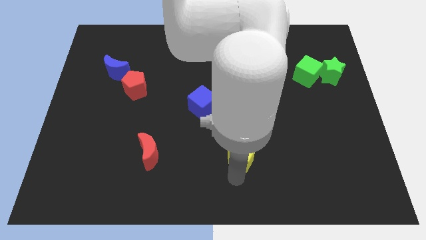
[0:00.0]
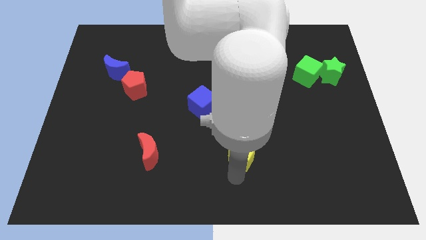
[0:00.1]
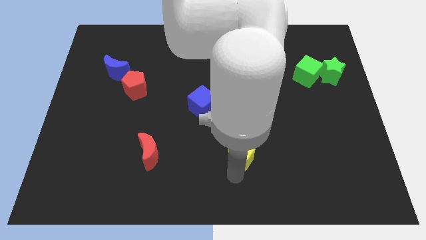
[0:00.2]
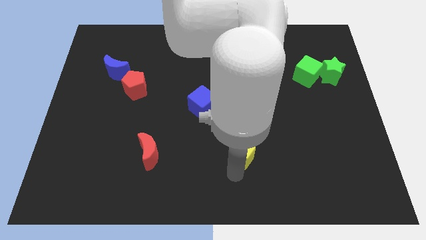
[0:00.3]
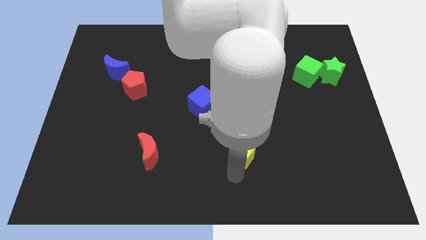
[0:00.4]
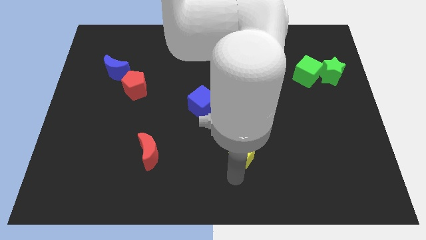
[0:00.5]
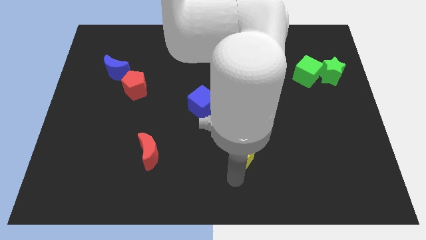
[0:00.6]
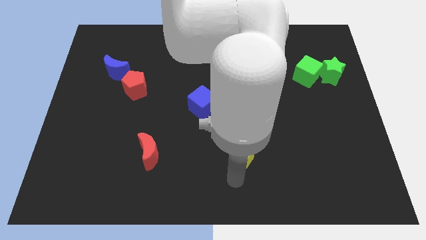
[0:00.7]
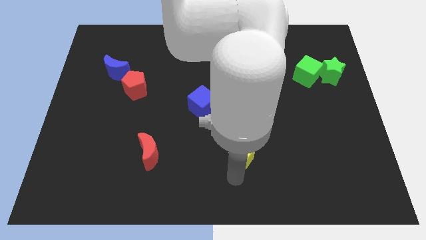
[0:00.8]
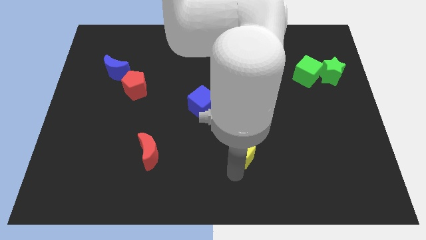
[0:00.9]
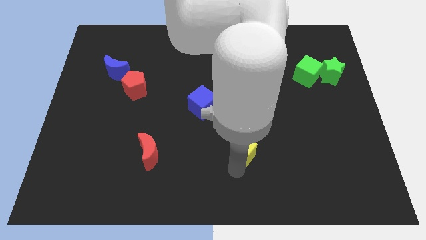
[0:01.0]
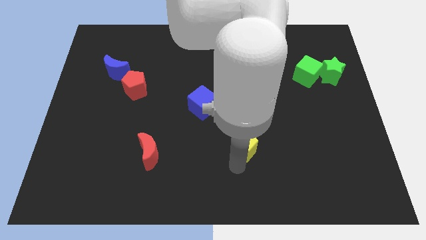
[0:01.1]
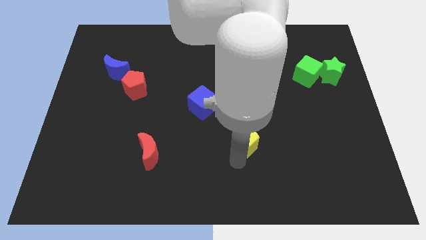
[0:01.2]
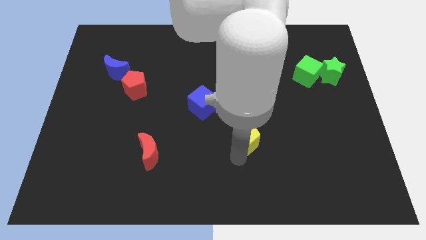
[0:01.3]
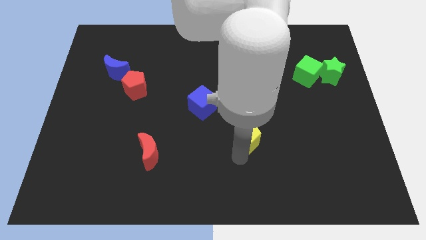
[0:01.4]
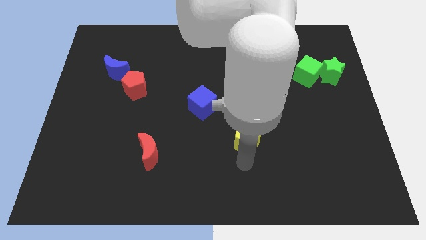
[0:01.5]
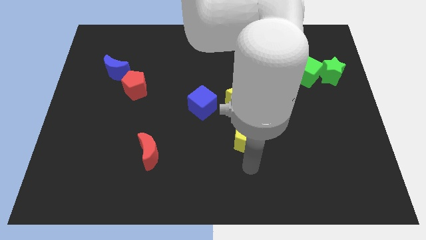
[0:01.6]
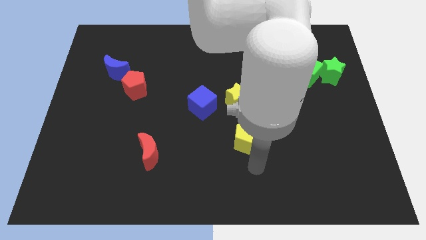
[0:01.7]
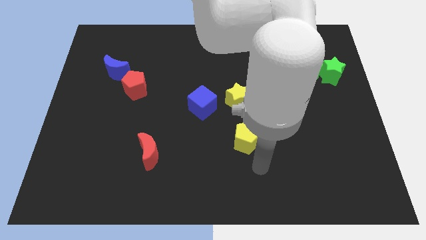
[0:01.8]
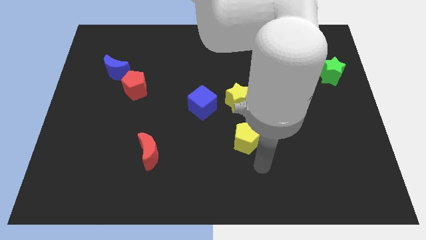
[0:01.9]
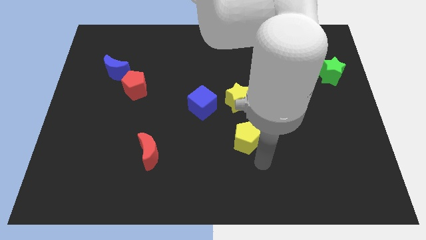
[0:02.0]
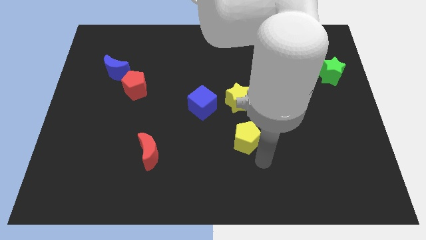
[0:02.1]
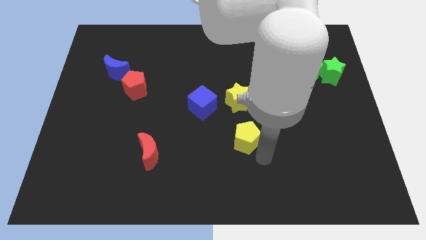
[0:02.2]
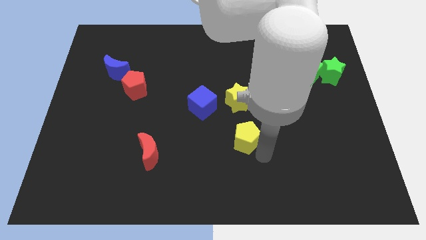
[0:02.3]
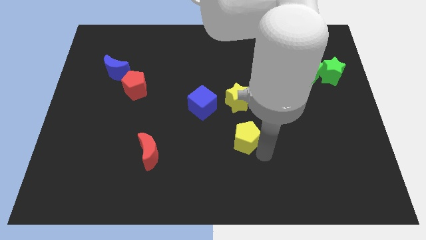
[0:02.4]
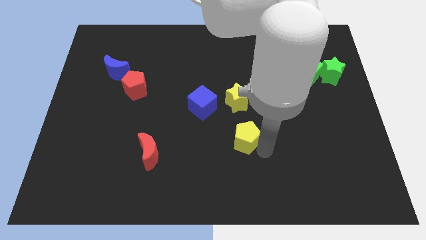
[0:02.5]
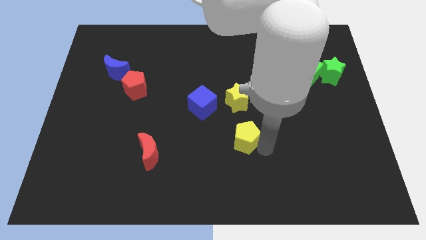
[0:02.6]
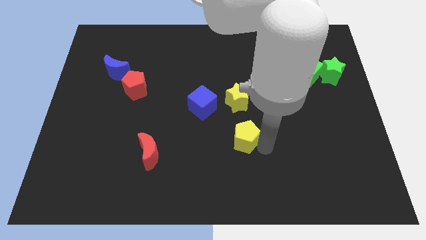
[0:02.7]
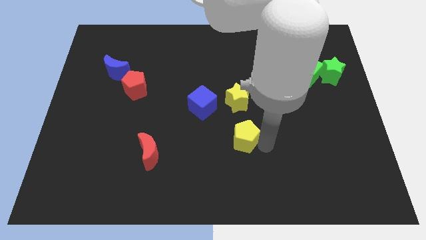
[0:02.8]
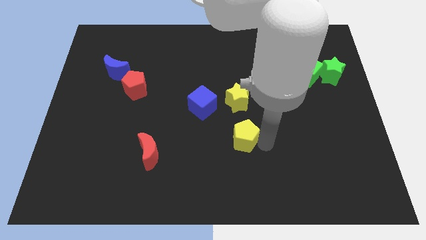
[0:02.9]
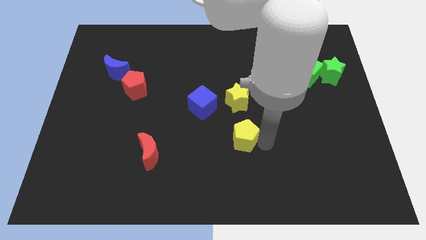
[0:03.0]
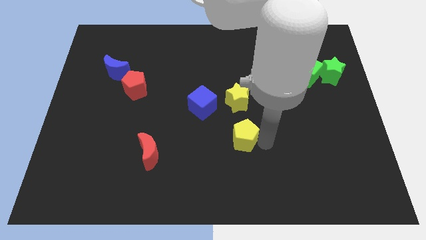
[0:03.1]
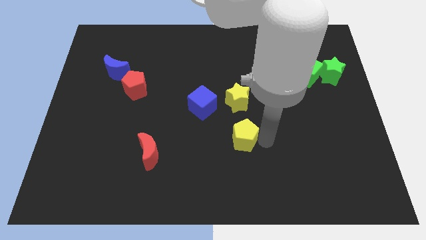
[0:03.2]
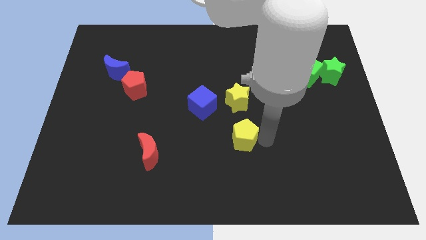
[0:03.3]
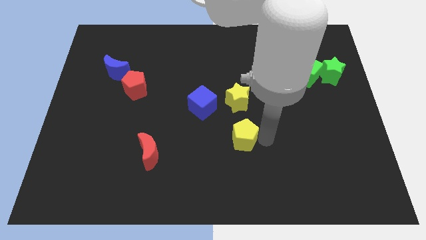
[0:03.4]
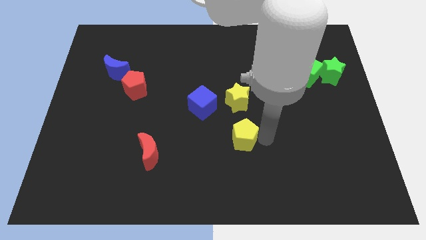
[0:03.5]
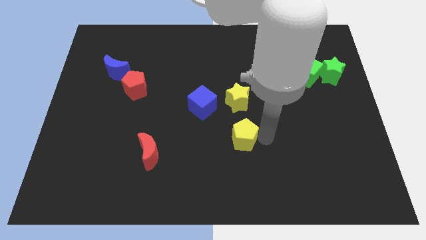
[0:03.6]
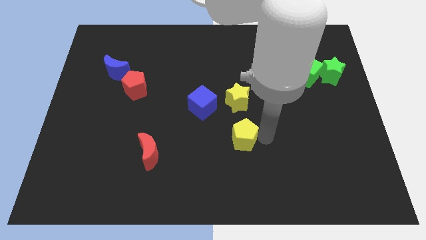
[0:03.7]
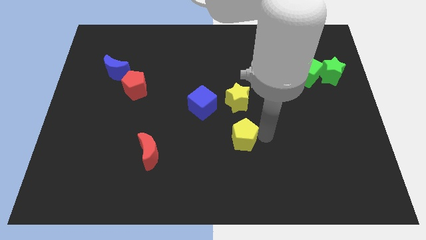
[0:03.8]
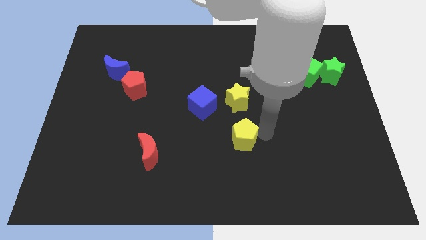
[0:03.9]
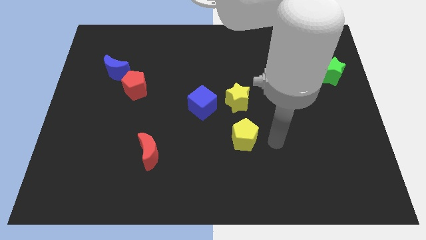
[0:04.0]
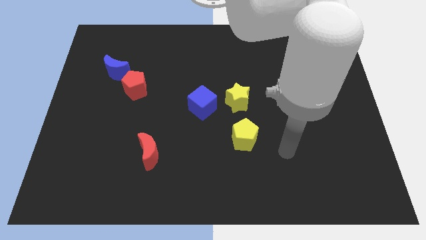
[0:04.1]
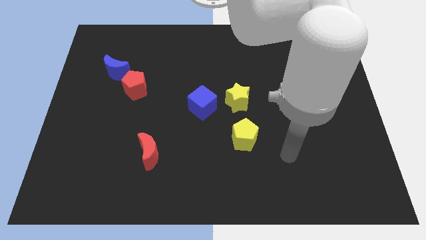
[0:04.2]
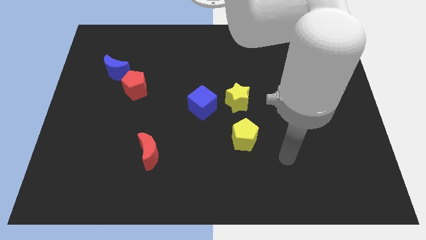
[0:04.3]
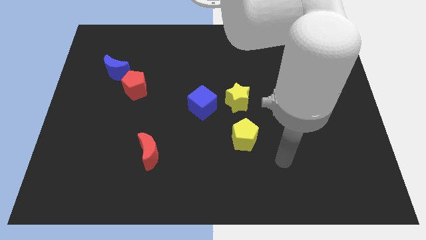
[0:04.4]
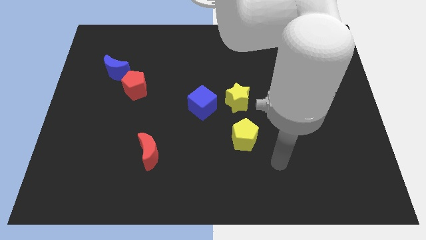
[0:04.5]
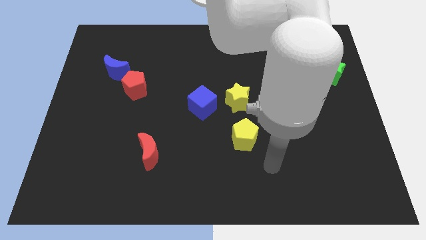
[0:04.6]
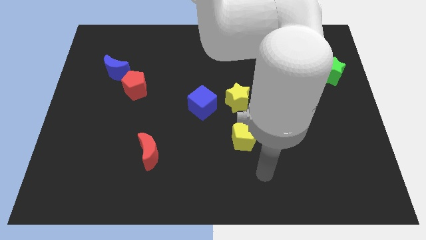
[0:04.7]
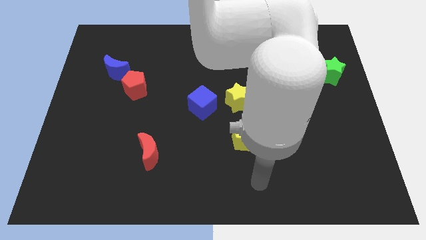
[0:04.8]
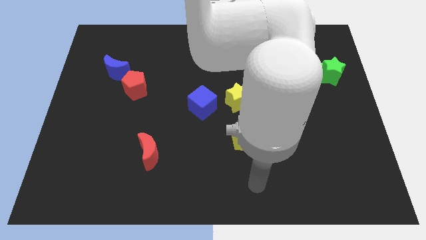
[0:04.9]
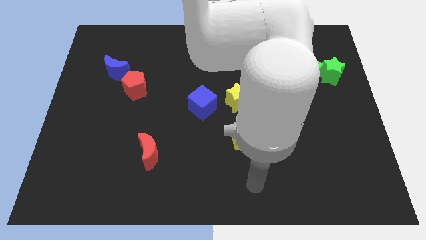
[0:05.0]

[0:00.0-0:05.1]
push yellow pentagon to the bottom of the yellow star

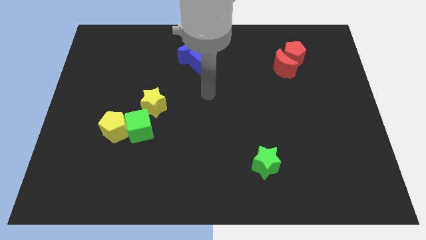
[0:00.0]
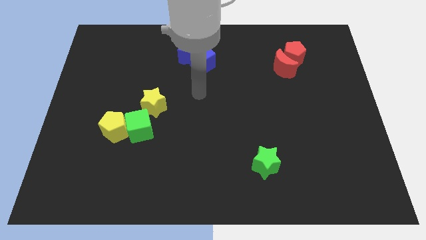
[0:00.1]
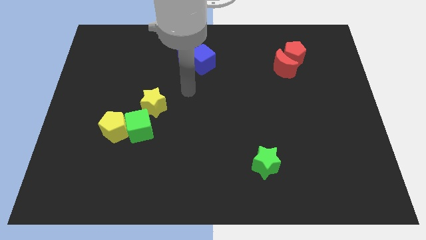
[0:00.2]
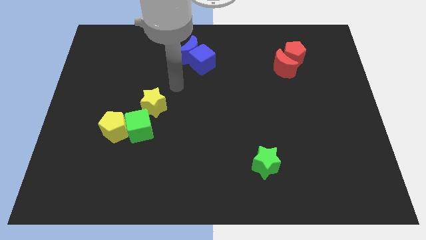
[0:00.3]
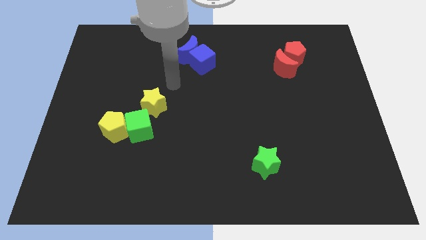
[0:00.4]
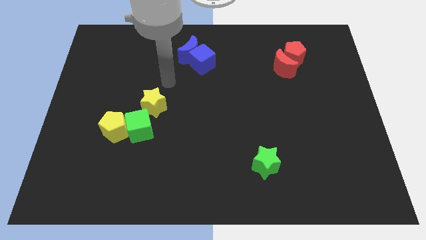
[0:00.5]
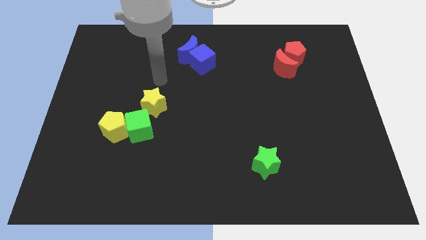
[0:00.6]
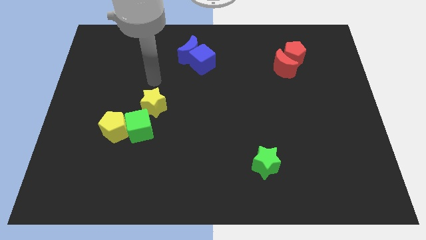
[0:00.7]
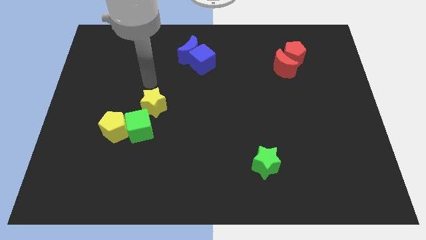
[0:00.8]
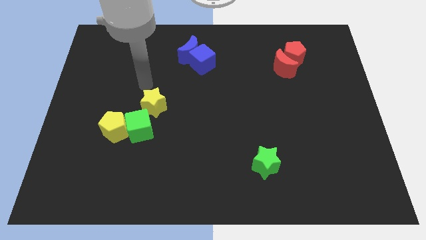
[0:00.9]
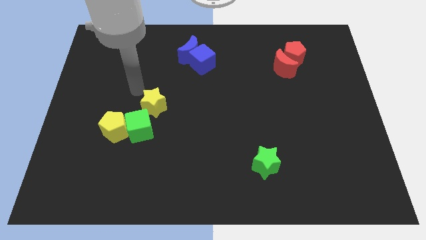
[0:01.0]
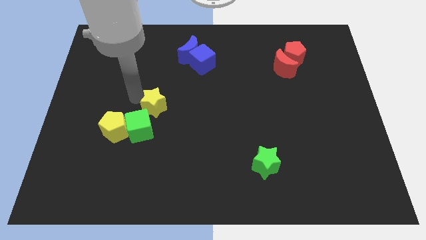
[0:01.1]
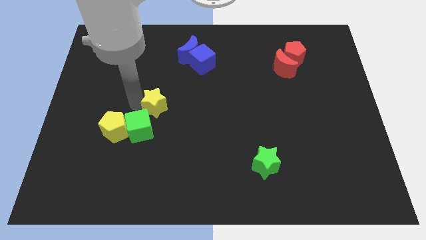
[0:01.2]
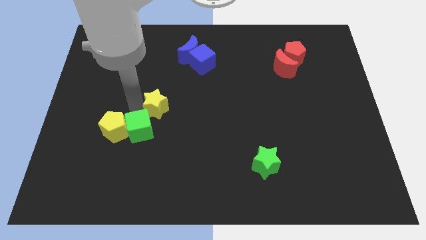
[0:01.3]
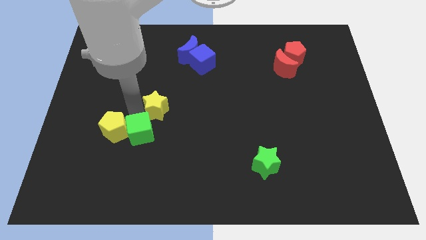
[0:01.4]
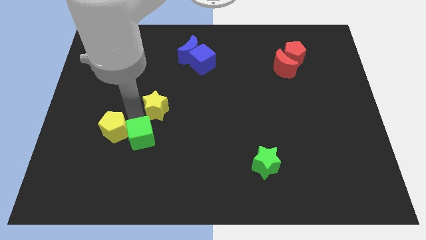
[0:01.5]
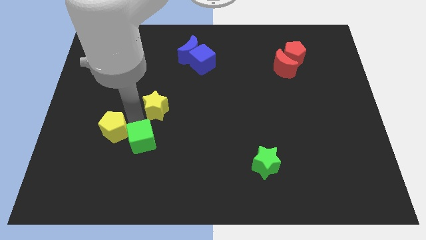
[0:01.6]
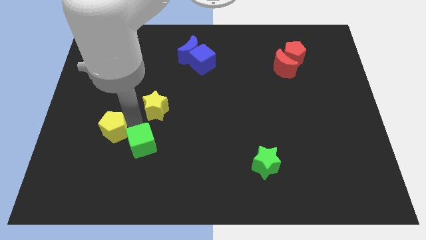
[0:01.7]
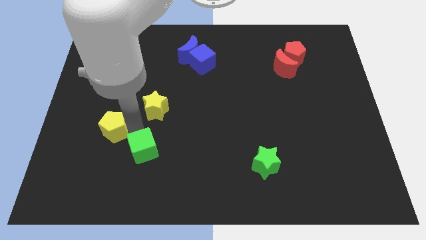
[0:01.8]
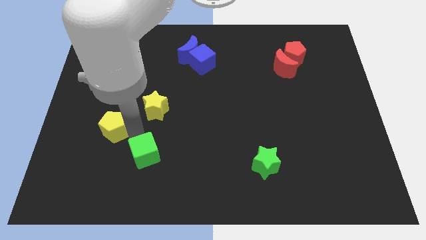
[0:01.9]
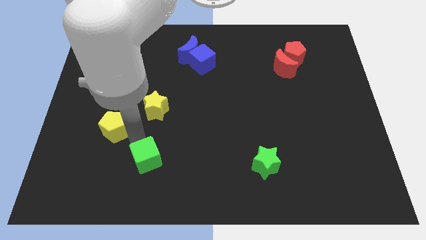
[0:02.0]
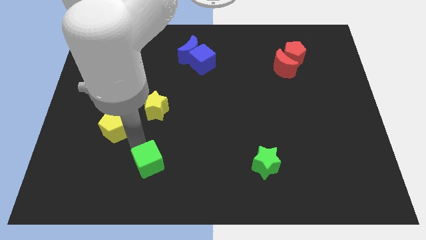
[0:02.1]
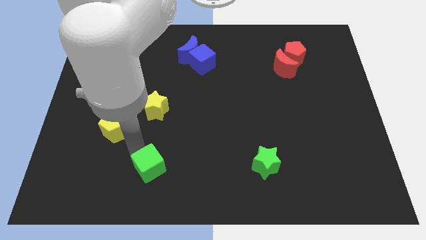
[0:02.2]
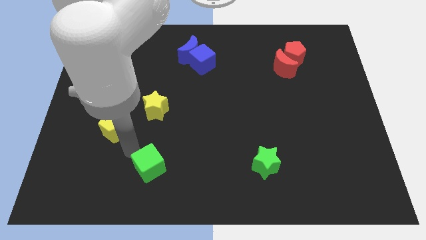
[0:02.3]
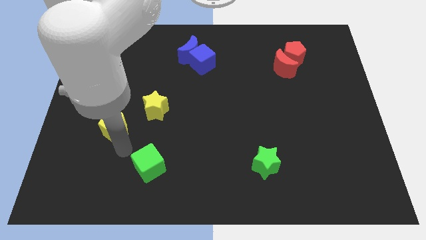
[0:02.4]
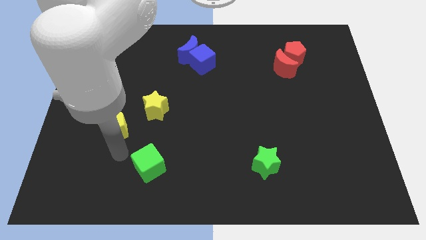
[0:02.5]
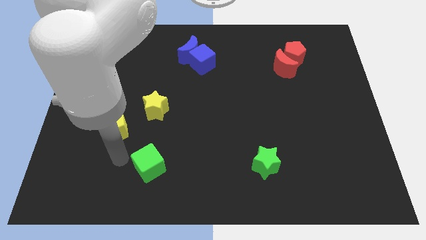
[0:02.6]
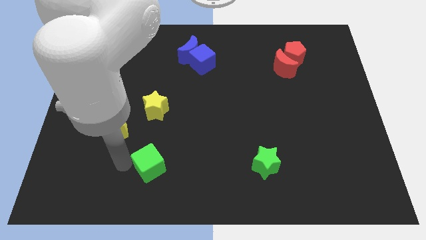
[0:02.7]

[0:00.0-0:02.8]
push the green cube towards the bottom center of the board

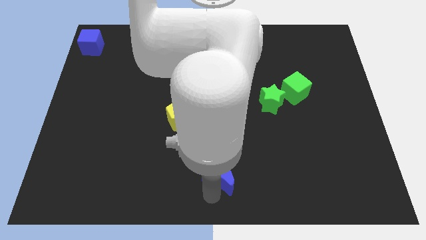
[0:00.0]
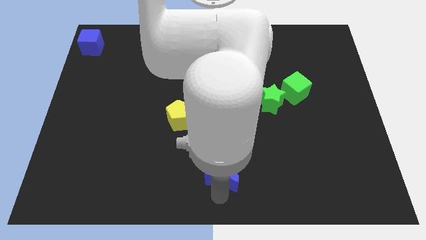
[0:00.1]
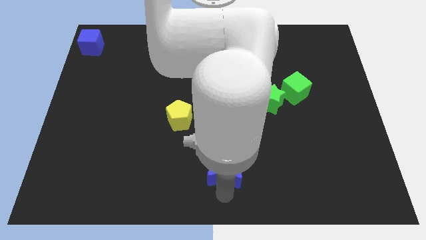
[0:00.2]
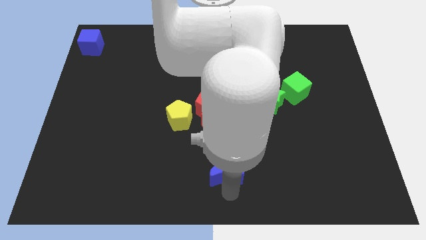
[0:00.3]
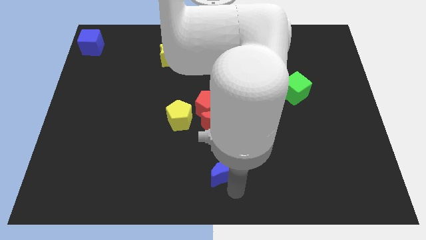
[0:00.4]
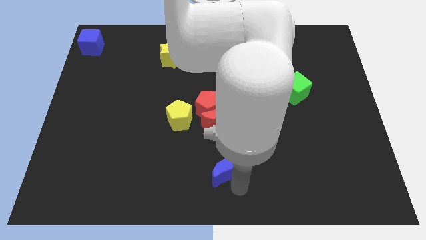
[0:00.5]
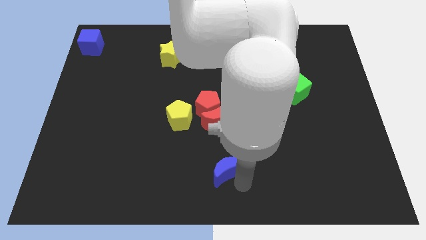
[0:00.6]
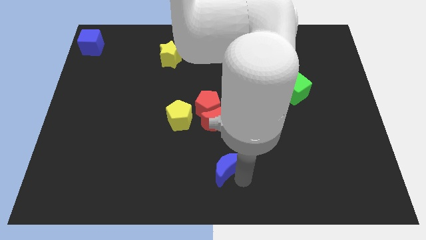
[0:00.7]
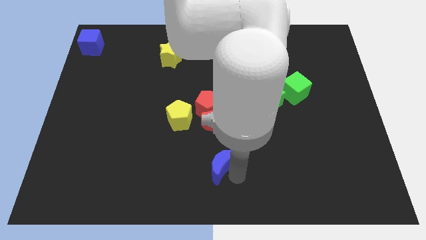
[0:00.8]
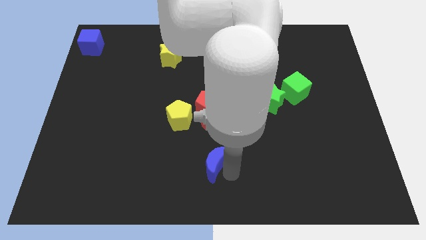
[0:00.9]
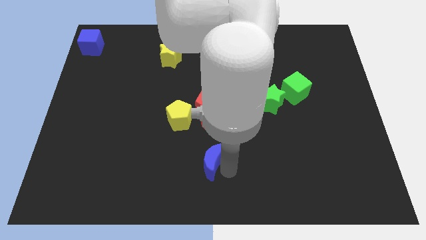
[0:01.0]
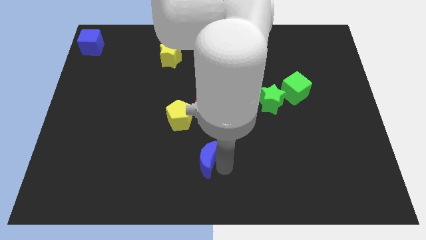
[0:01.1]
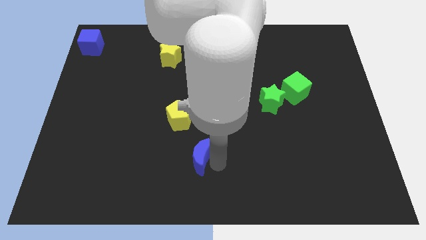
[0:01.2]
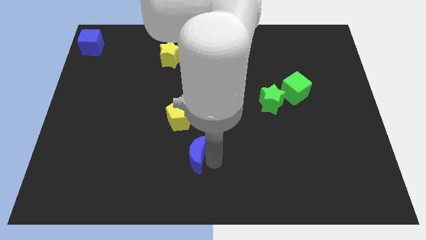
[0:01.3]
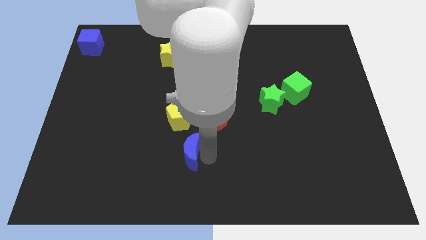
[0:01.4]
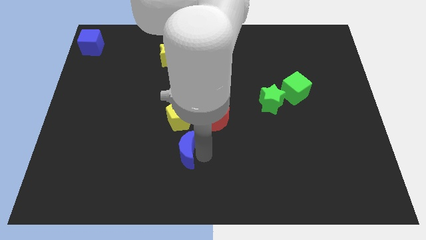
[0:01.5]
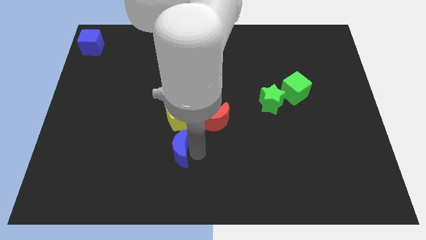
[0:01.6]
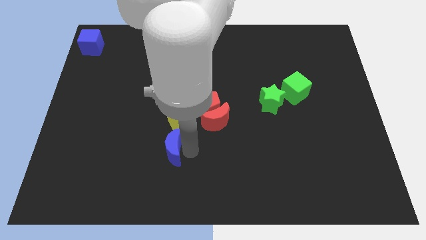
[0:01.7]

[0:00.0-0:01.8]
push the blue moon below the yellow pentagon
